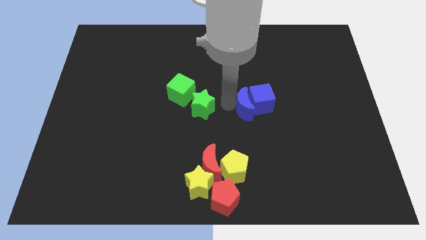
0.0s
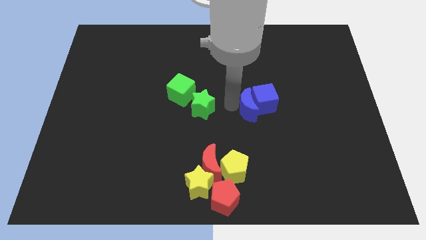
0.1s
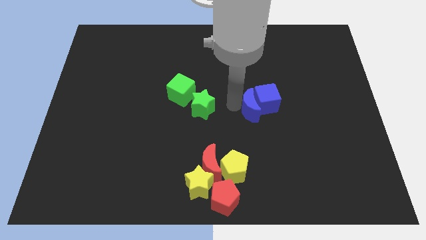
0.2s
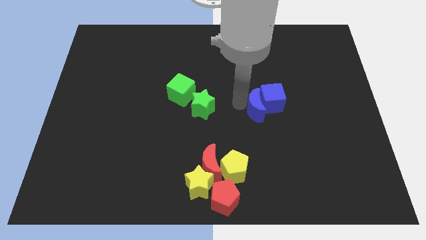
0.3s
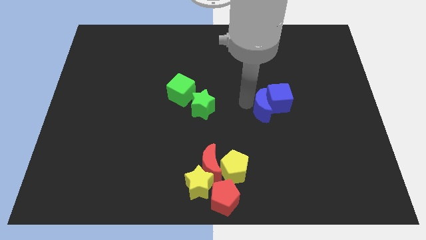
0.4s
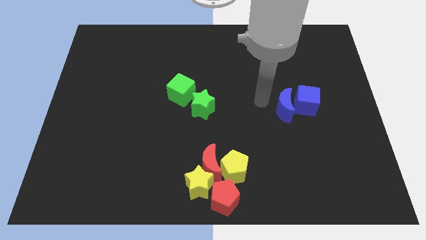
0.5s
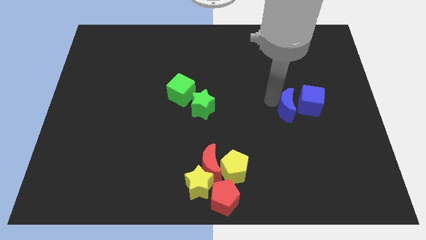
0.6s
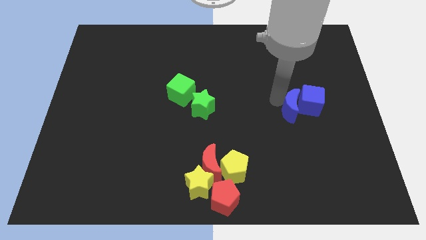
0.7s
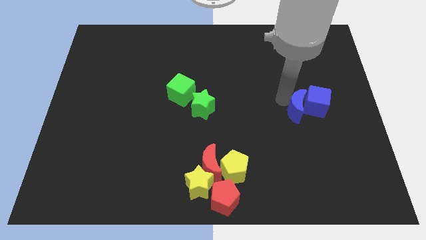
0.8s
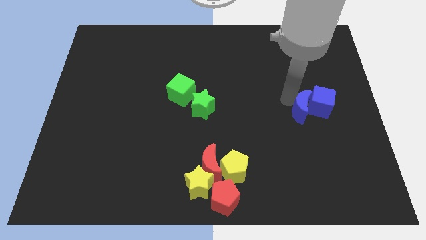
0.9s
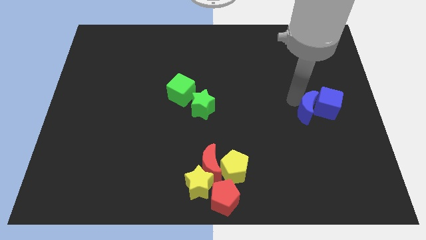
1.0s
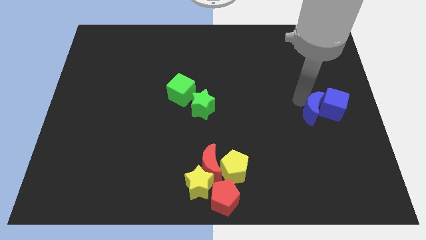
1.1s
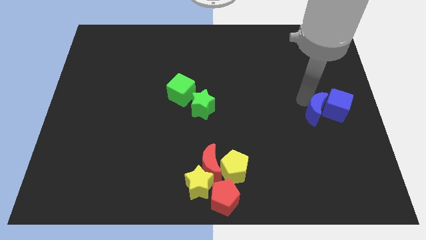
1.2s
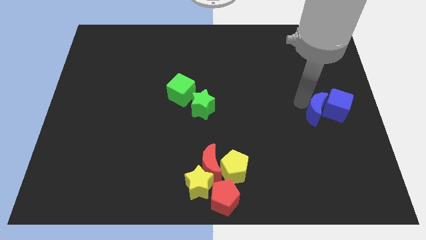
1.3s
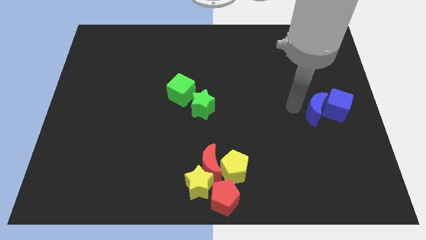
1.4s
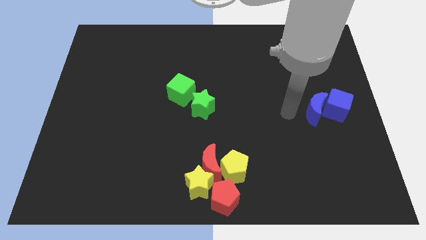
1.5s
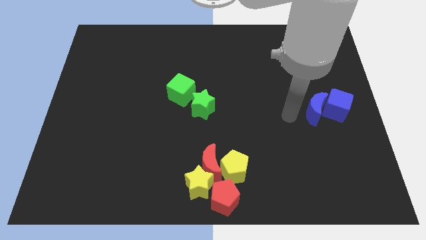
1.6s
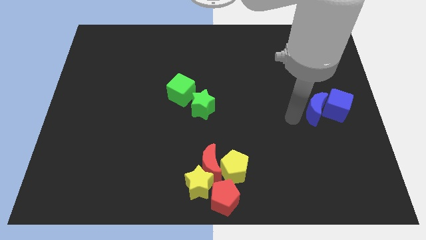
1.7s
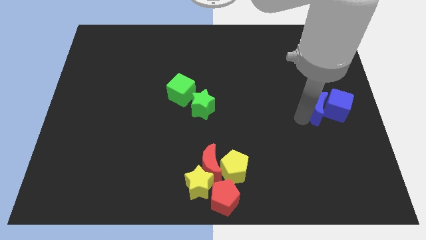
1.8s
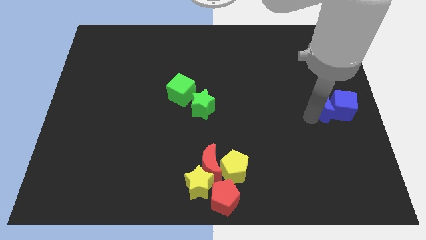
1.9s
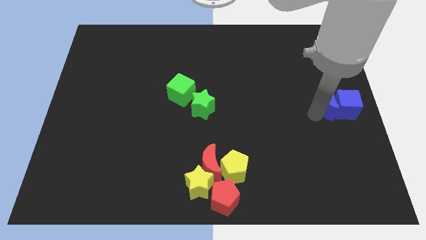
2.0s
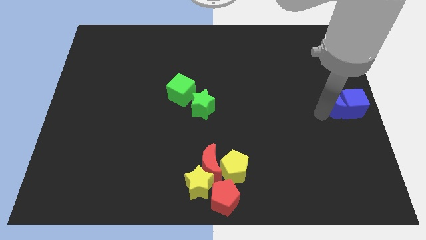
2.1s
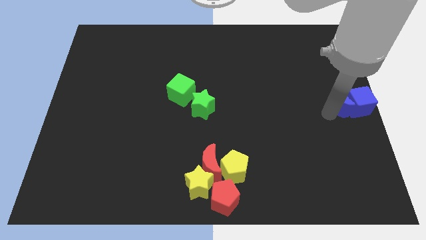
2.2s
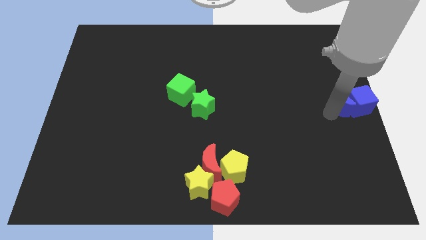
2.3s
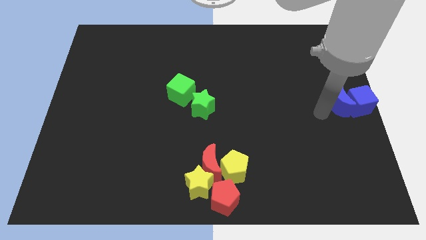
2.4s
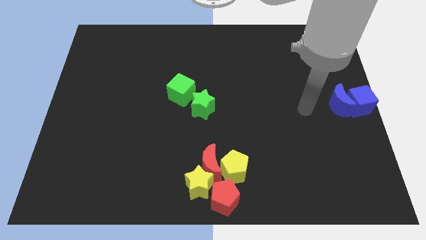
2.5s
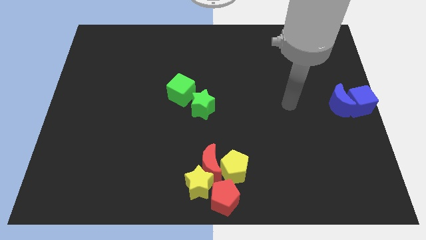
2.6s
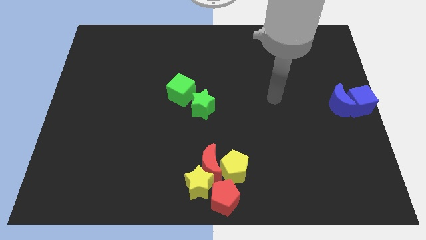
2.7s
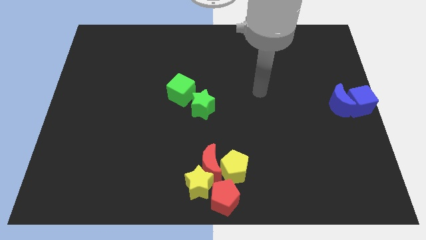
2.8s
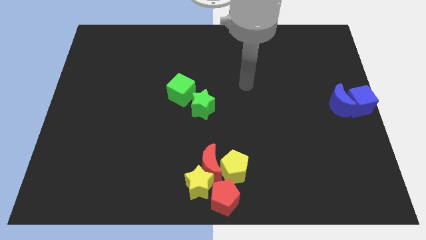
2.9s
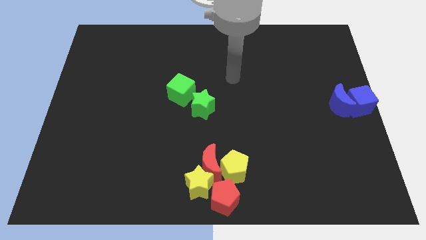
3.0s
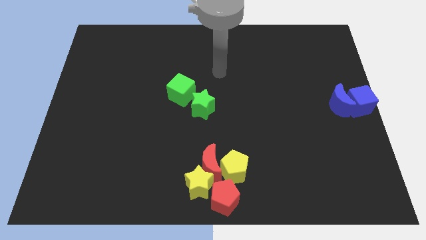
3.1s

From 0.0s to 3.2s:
place the blue blocks at the right center of the board

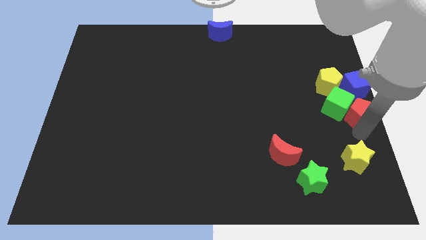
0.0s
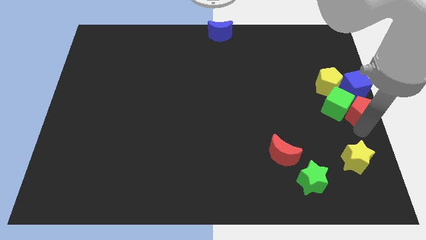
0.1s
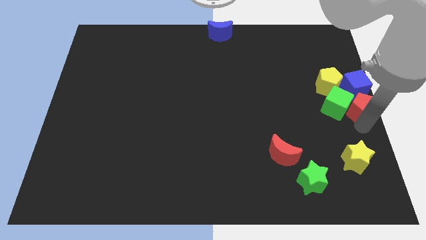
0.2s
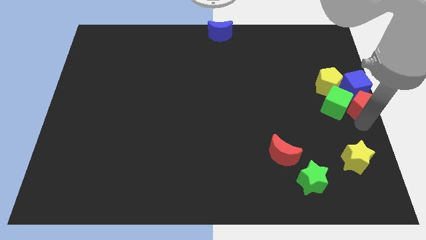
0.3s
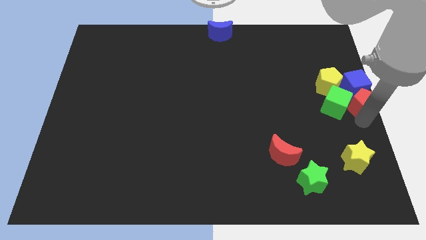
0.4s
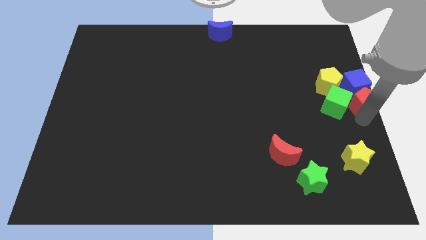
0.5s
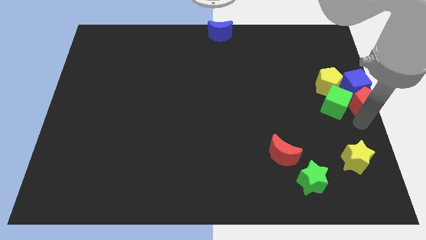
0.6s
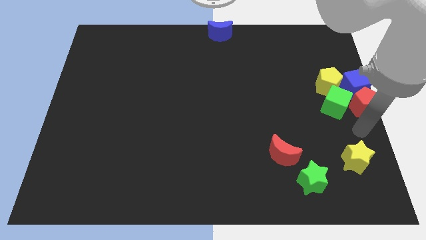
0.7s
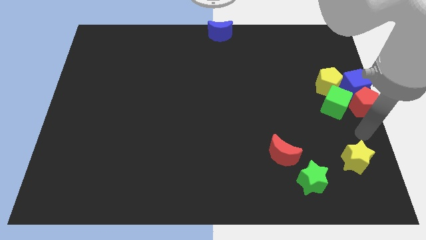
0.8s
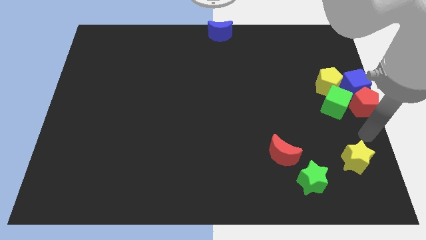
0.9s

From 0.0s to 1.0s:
push red pentagon below blue cube

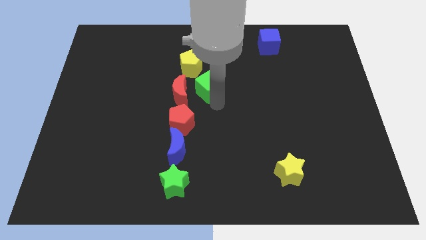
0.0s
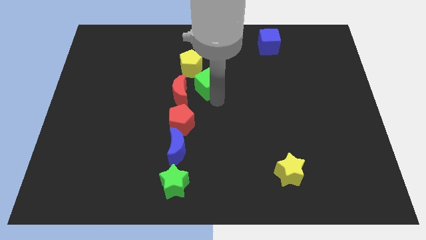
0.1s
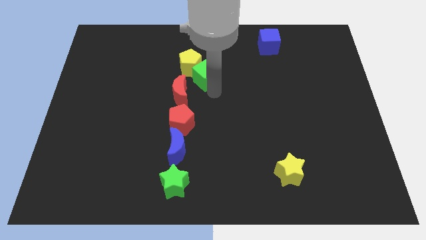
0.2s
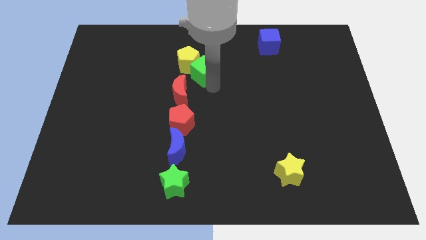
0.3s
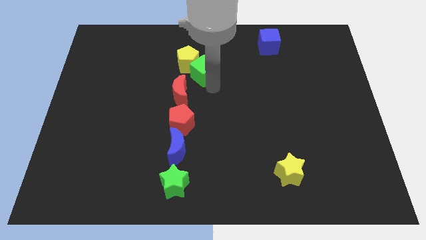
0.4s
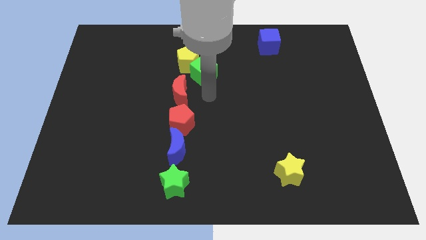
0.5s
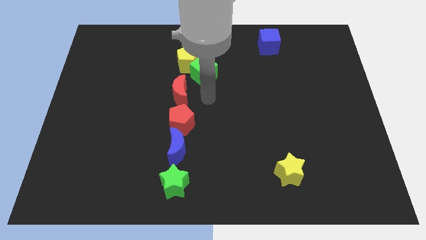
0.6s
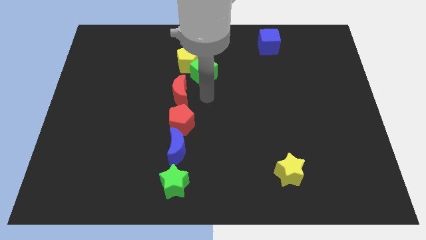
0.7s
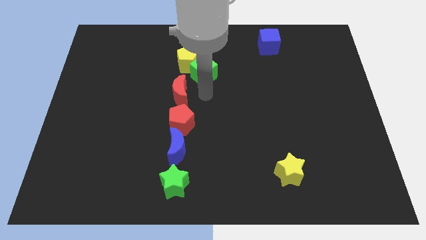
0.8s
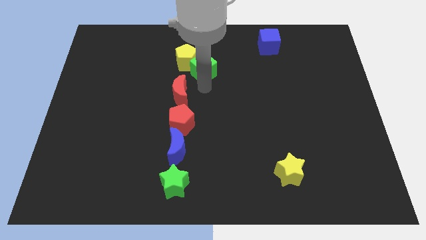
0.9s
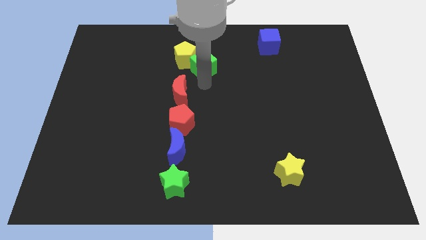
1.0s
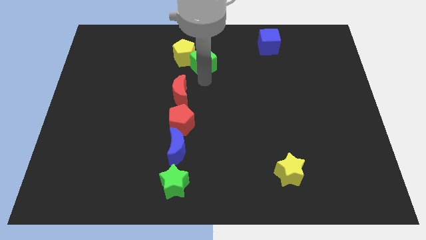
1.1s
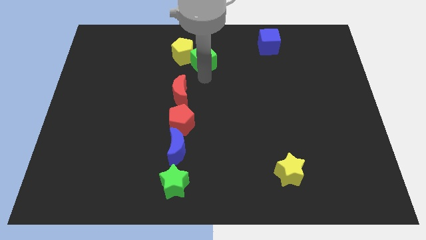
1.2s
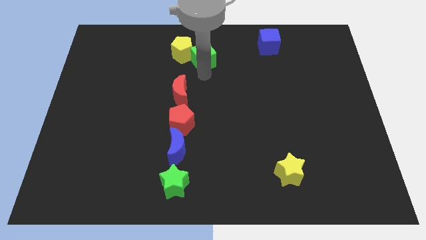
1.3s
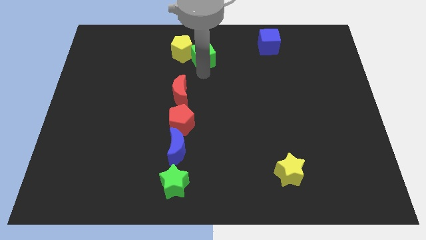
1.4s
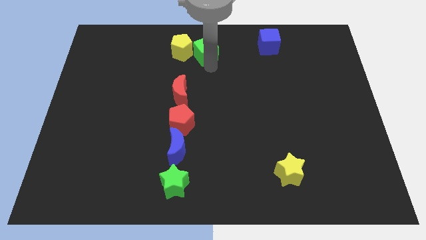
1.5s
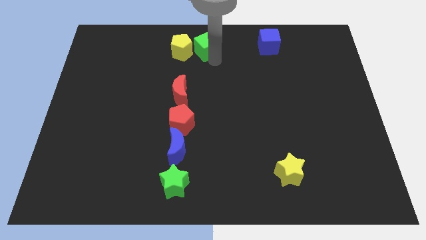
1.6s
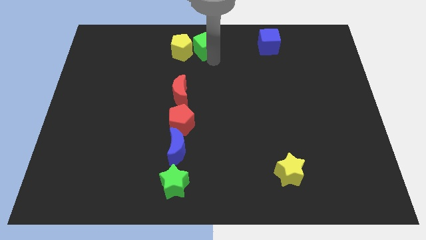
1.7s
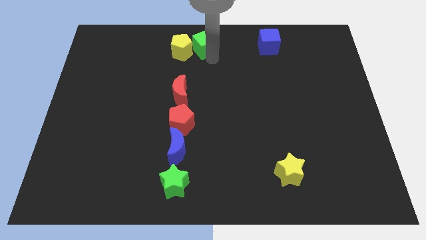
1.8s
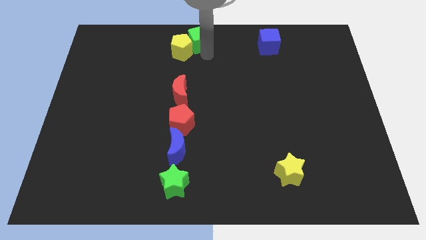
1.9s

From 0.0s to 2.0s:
push the green cube into yellow pentagon

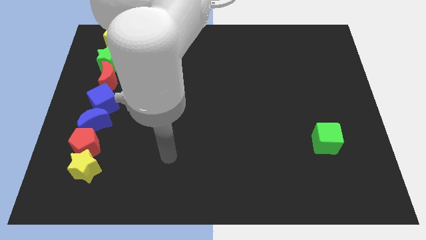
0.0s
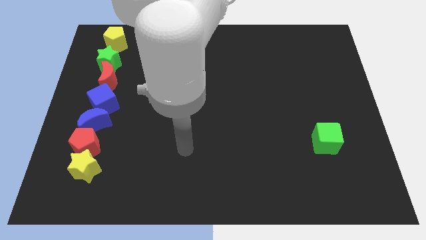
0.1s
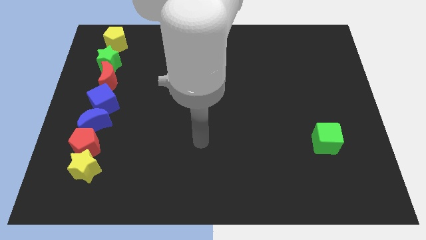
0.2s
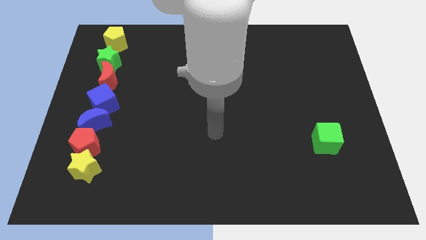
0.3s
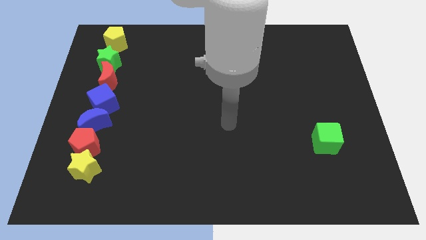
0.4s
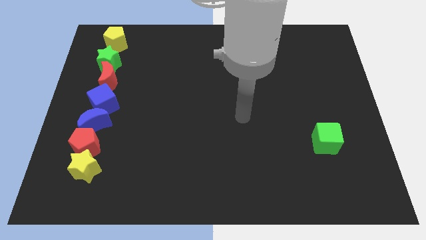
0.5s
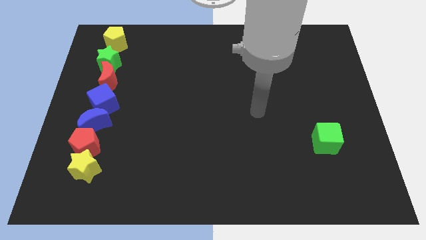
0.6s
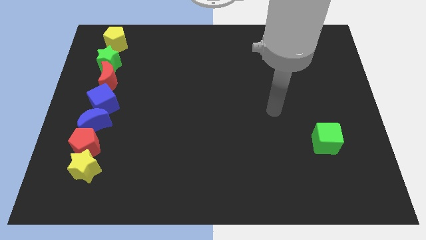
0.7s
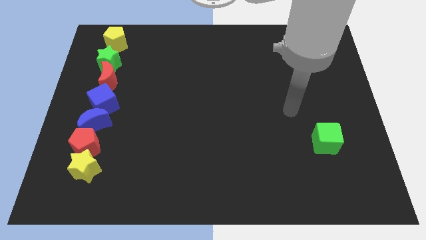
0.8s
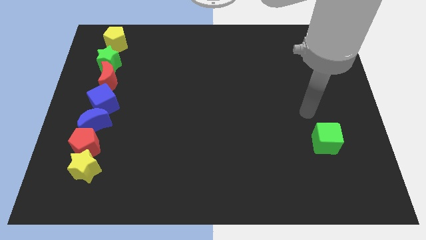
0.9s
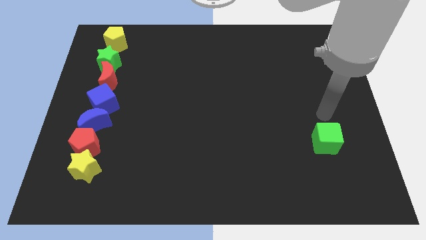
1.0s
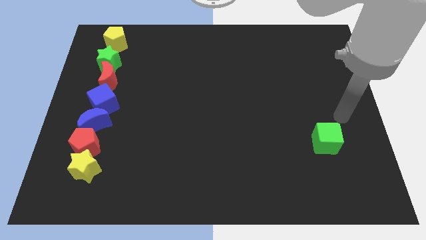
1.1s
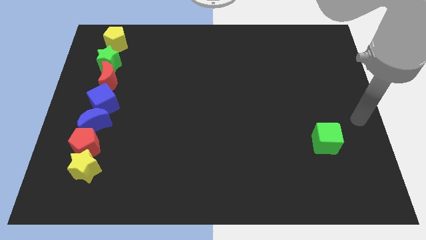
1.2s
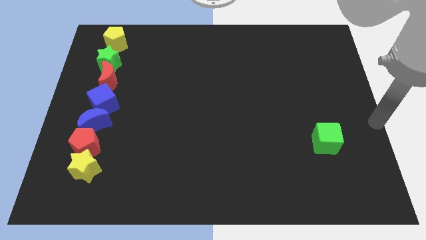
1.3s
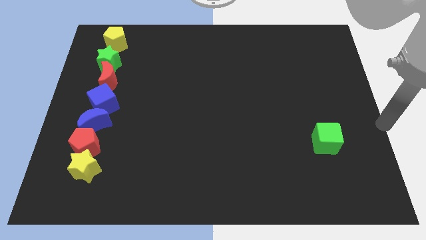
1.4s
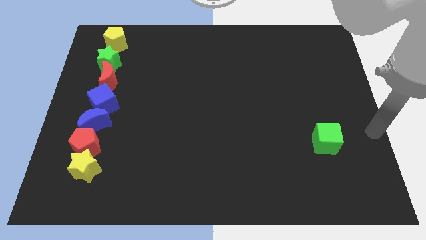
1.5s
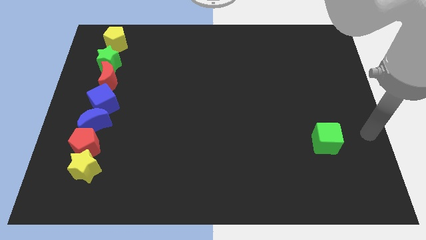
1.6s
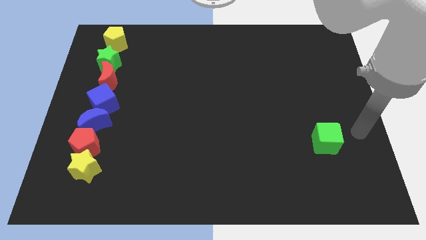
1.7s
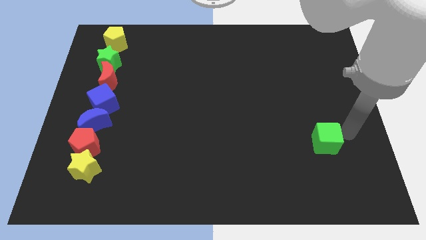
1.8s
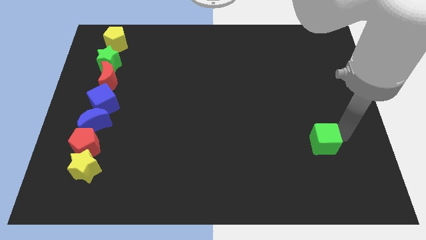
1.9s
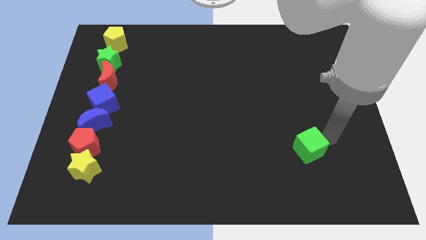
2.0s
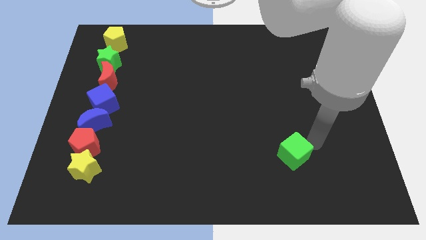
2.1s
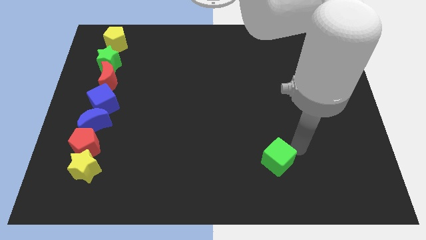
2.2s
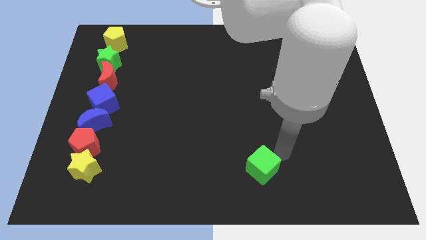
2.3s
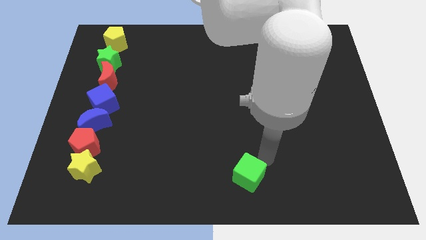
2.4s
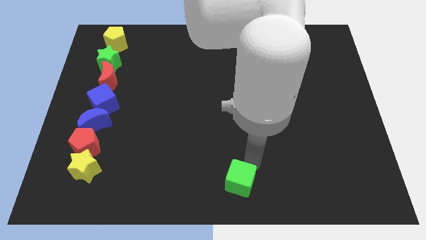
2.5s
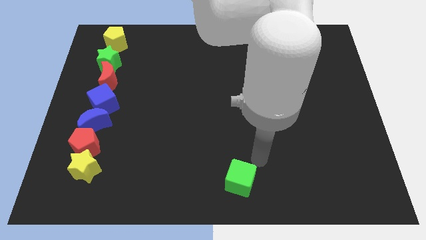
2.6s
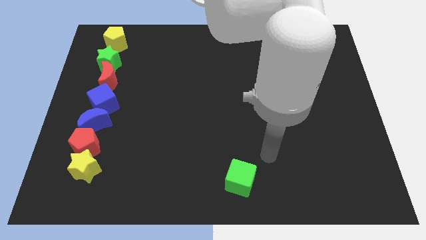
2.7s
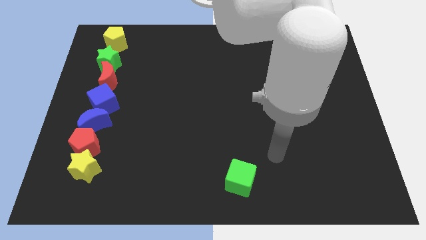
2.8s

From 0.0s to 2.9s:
push the green cube to the bottom center of the board
